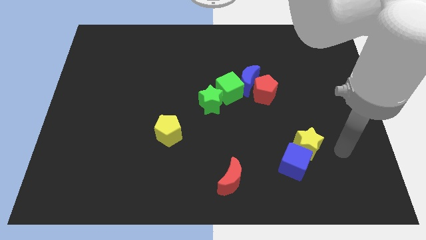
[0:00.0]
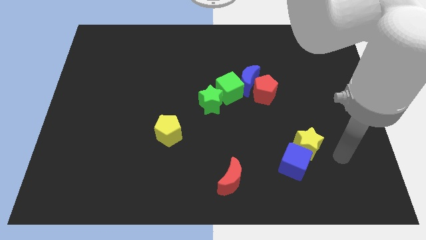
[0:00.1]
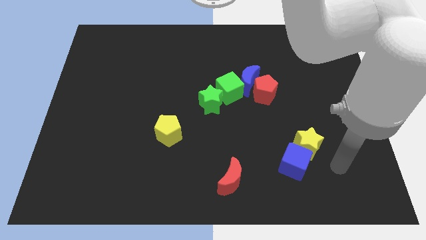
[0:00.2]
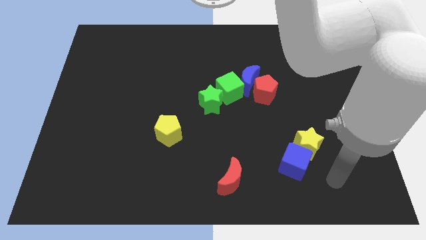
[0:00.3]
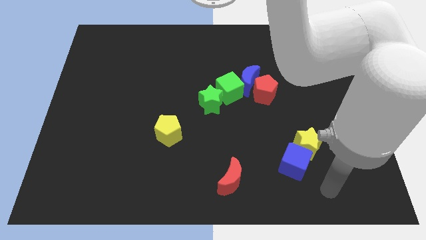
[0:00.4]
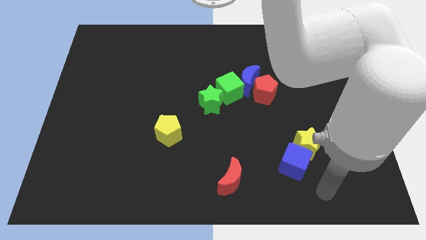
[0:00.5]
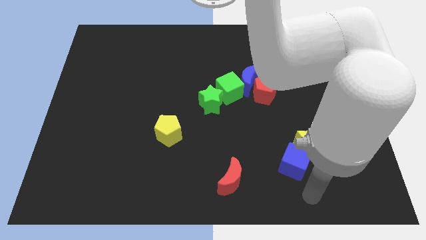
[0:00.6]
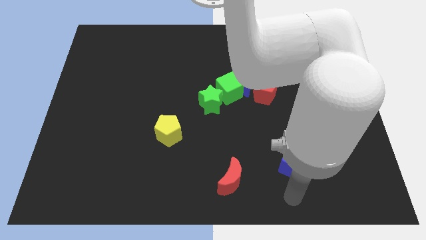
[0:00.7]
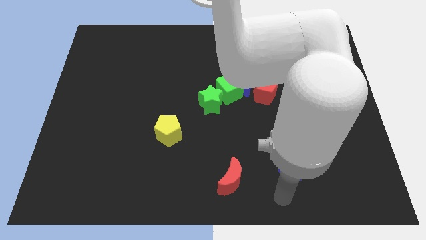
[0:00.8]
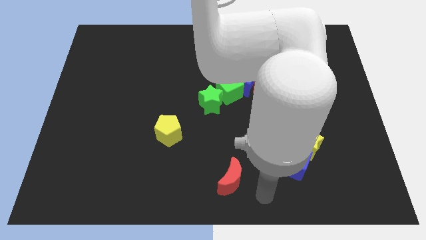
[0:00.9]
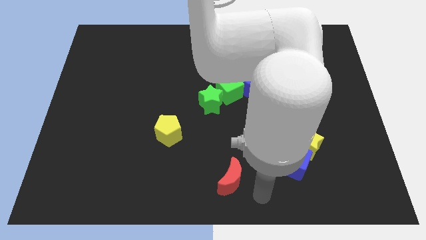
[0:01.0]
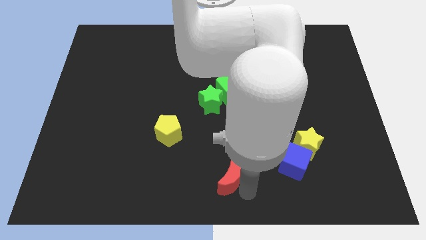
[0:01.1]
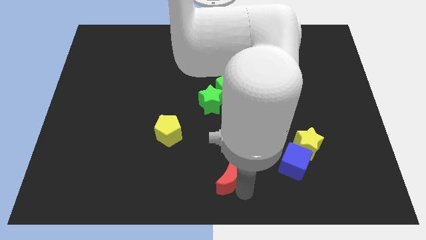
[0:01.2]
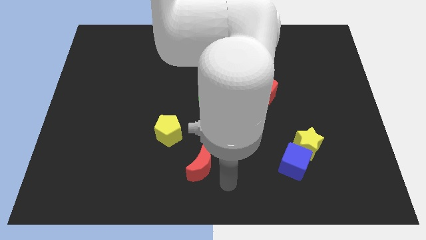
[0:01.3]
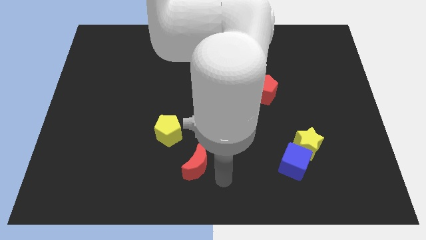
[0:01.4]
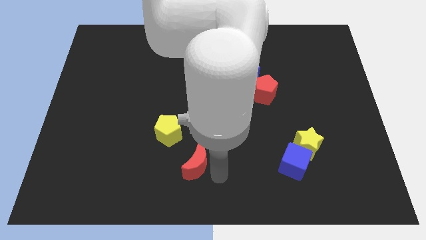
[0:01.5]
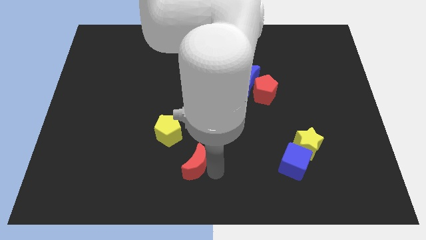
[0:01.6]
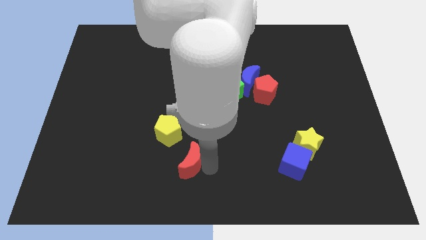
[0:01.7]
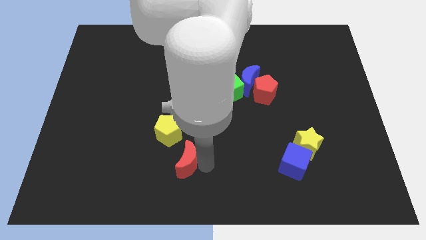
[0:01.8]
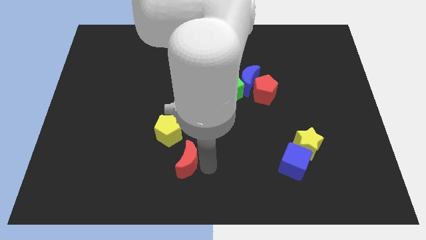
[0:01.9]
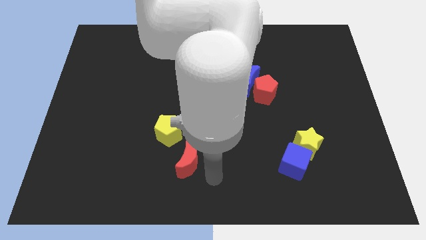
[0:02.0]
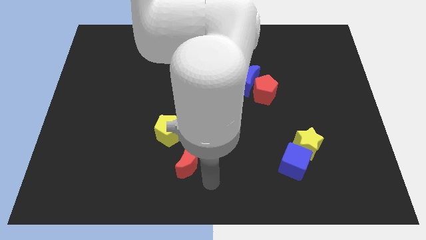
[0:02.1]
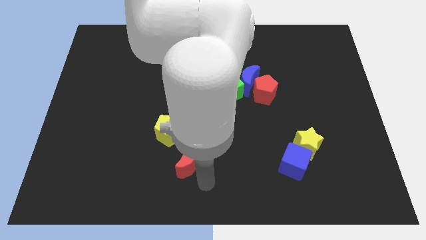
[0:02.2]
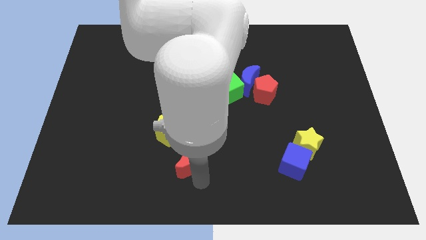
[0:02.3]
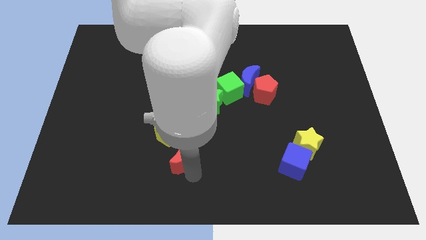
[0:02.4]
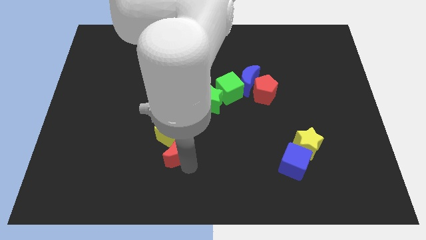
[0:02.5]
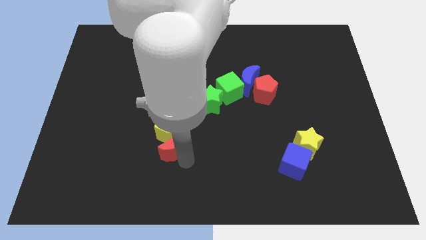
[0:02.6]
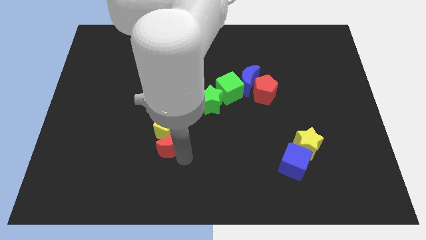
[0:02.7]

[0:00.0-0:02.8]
put the red moon to the yellow pentagon

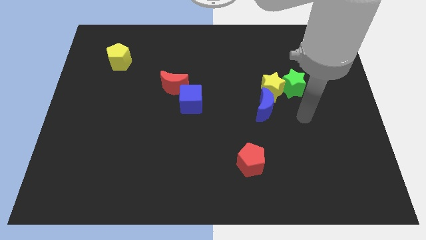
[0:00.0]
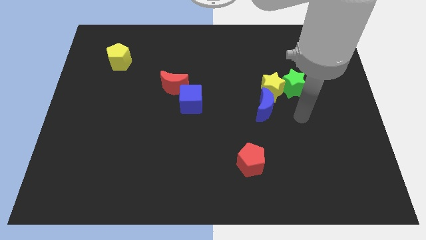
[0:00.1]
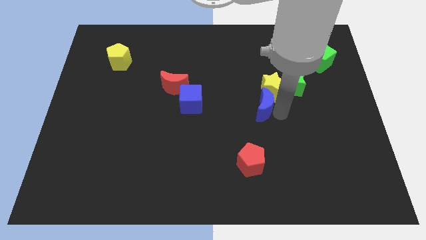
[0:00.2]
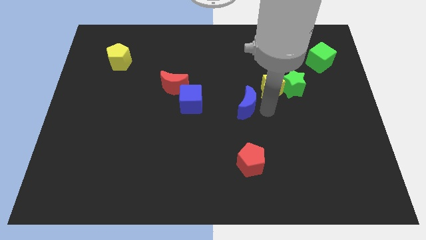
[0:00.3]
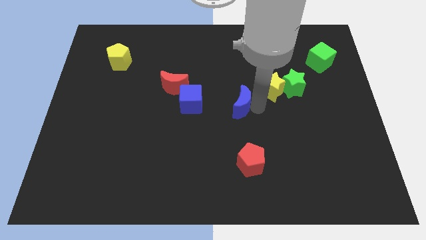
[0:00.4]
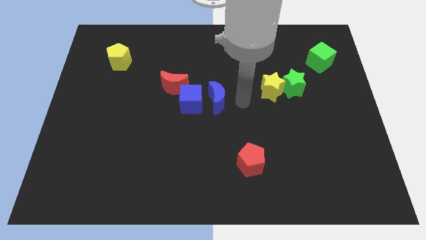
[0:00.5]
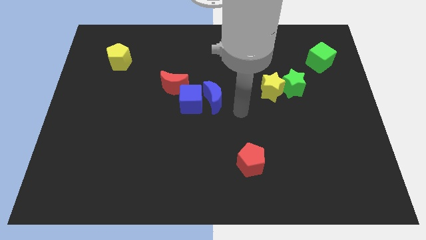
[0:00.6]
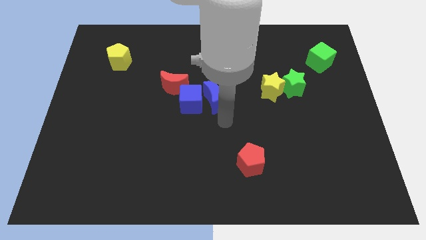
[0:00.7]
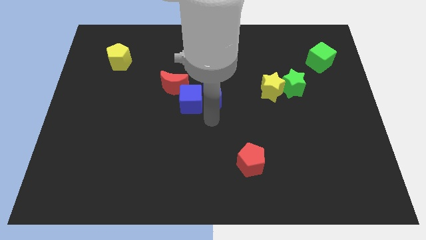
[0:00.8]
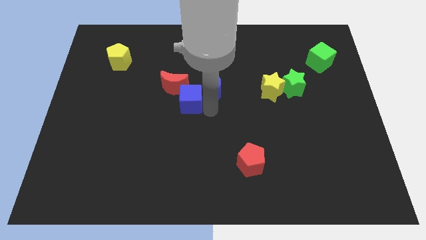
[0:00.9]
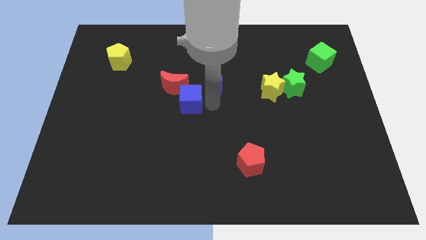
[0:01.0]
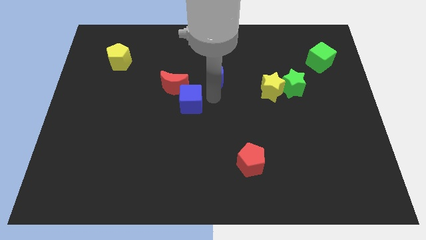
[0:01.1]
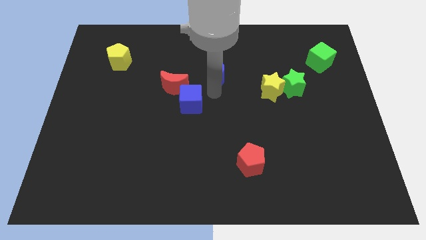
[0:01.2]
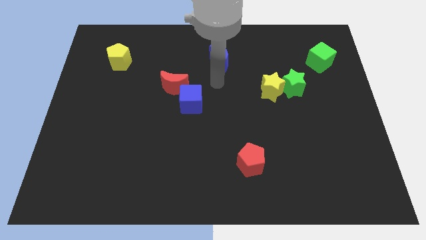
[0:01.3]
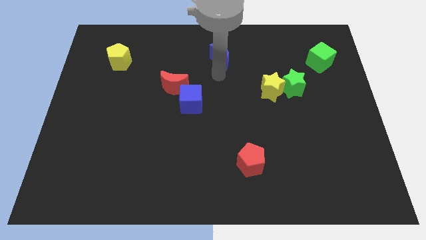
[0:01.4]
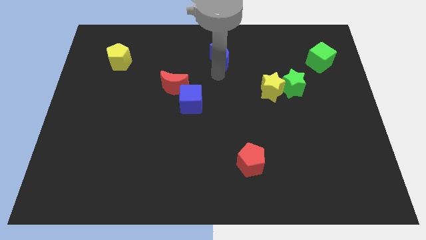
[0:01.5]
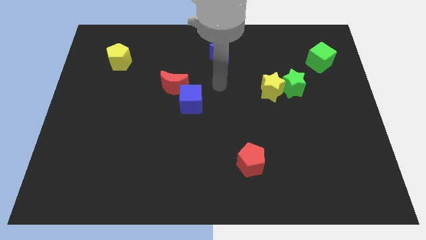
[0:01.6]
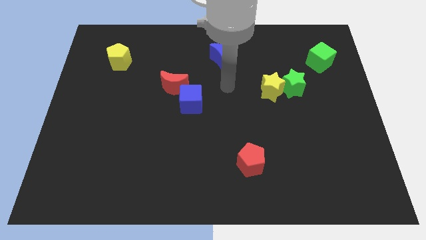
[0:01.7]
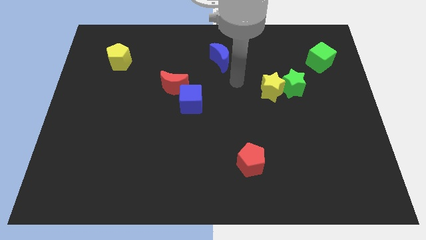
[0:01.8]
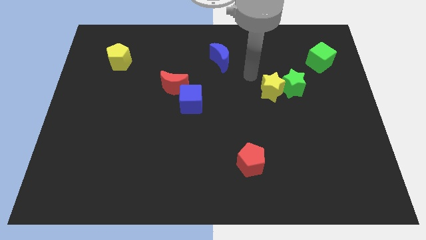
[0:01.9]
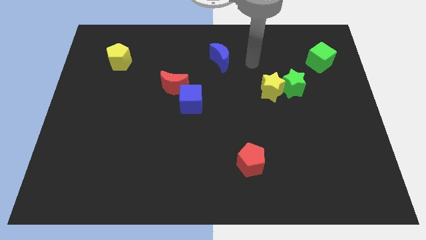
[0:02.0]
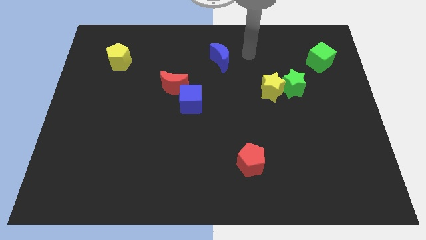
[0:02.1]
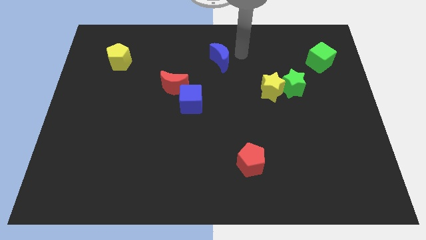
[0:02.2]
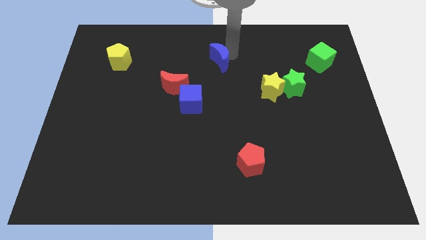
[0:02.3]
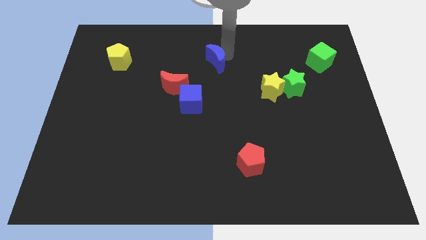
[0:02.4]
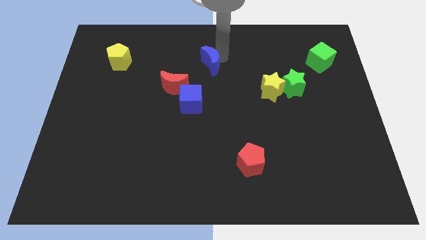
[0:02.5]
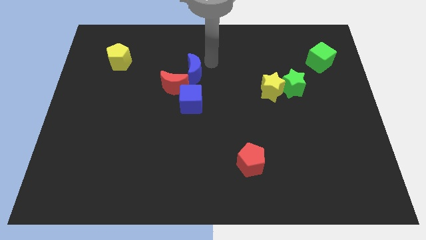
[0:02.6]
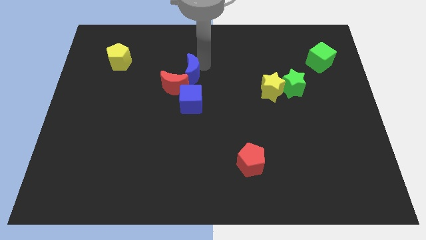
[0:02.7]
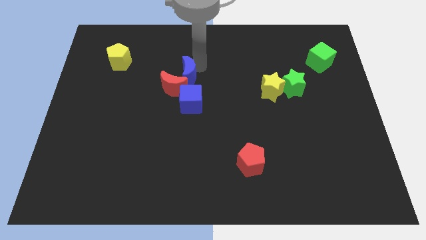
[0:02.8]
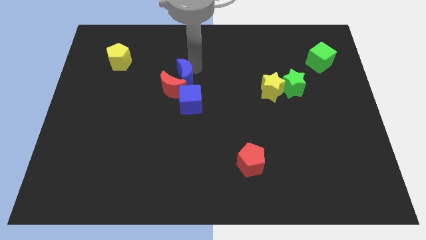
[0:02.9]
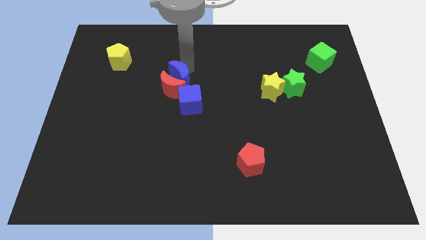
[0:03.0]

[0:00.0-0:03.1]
push the blue moon to the red moon

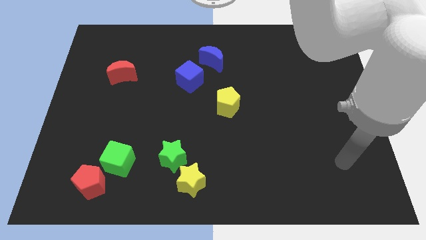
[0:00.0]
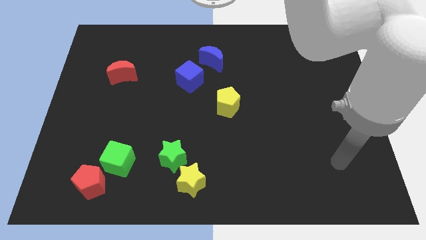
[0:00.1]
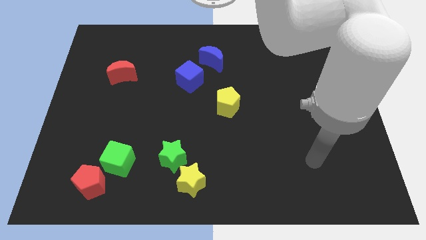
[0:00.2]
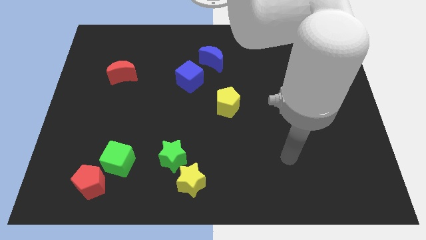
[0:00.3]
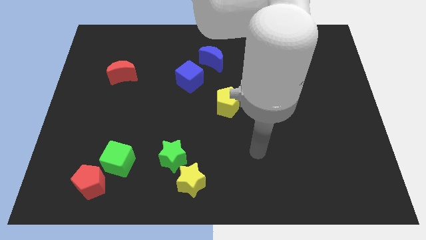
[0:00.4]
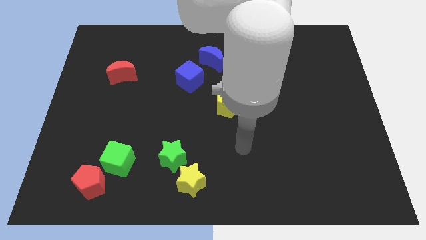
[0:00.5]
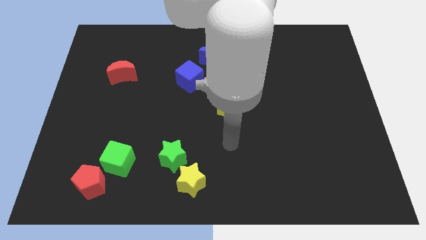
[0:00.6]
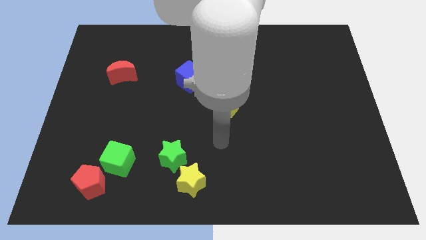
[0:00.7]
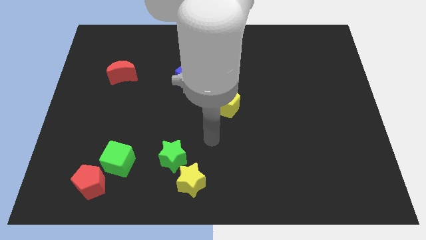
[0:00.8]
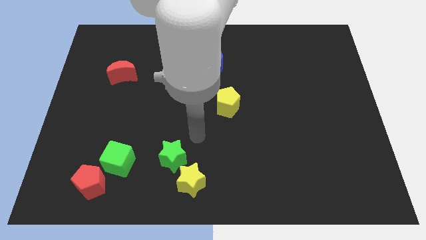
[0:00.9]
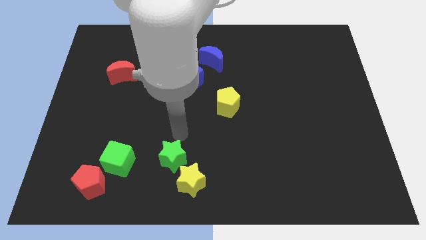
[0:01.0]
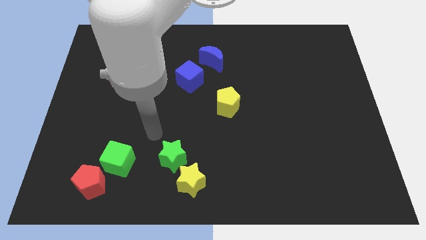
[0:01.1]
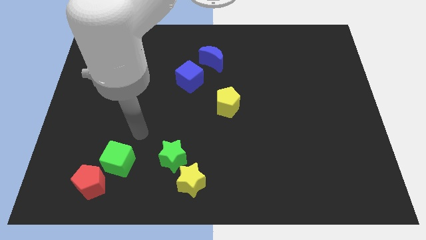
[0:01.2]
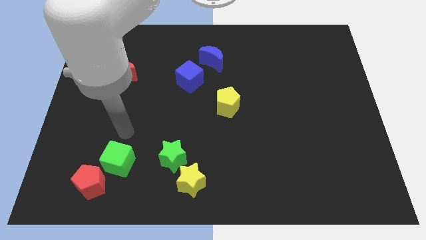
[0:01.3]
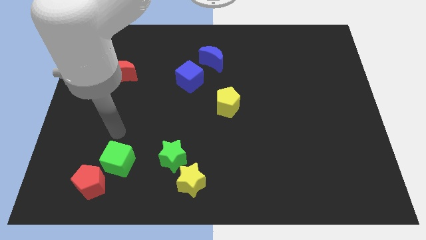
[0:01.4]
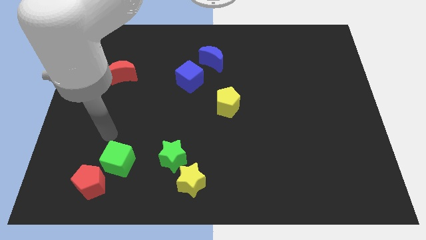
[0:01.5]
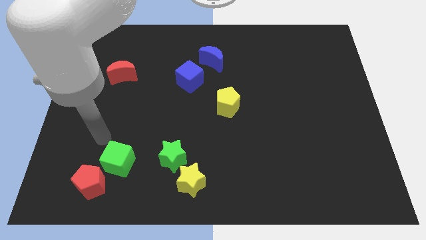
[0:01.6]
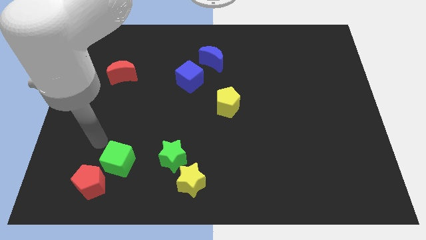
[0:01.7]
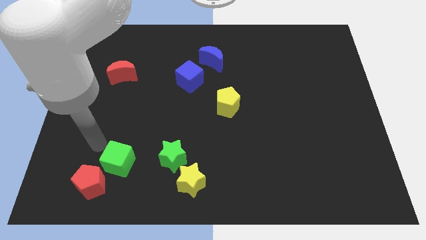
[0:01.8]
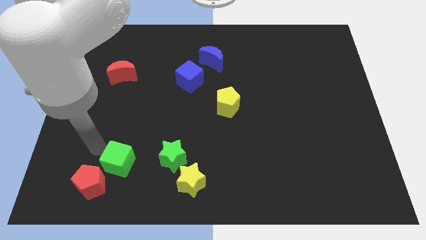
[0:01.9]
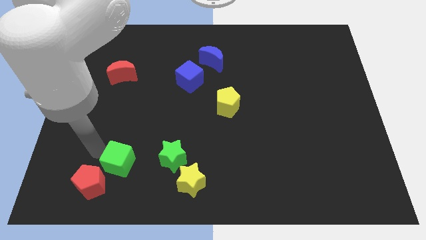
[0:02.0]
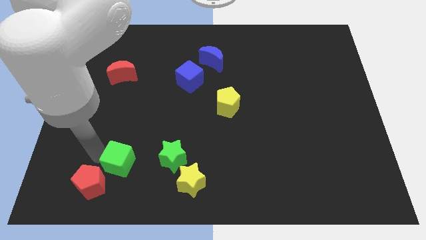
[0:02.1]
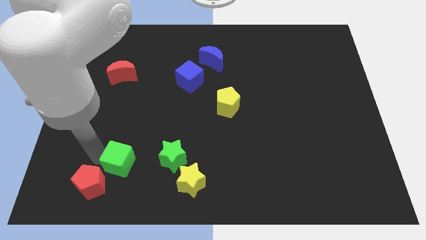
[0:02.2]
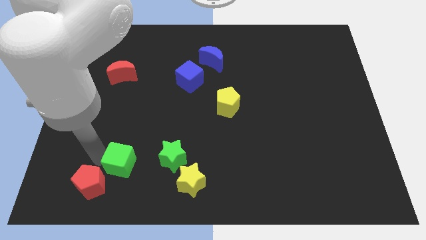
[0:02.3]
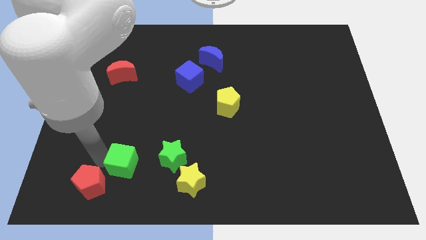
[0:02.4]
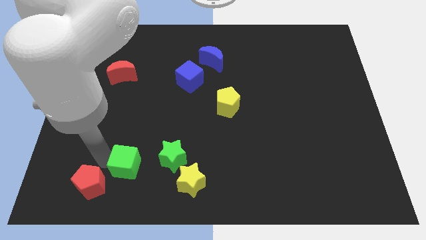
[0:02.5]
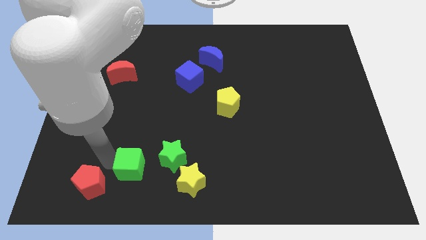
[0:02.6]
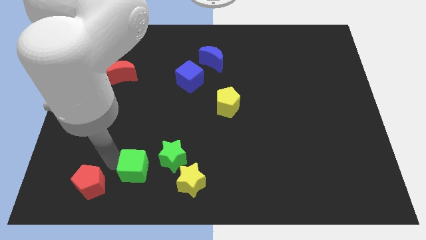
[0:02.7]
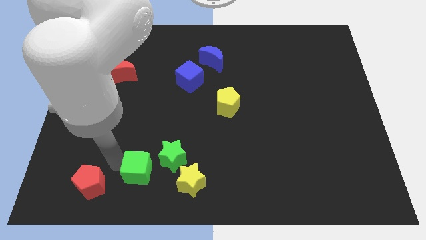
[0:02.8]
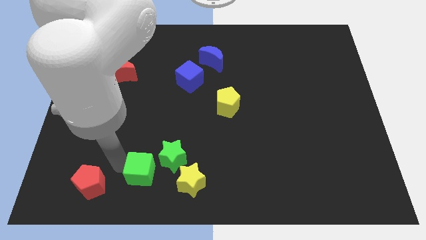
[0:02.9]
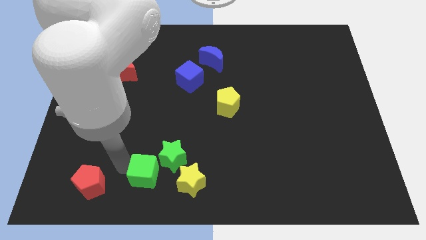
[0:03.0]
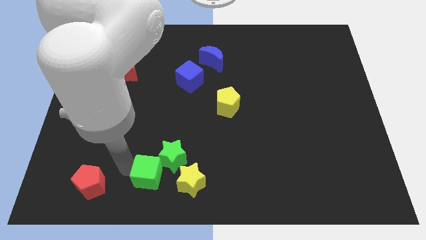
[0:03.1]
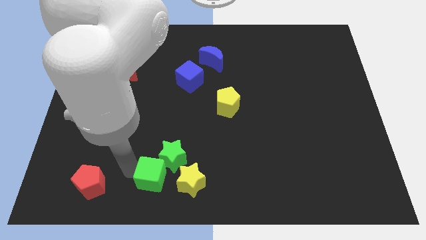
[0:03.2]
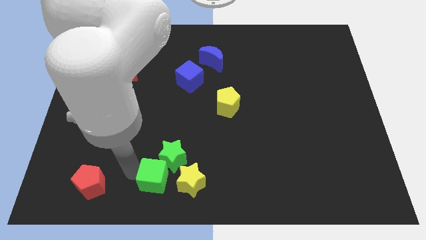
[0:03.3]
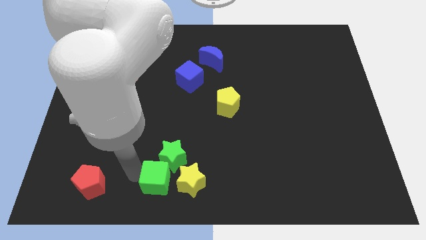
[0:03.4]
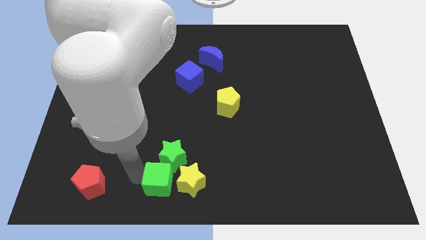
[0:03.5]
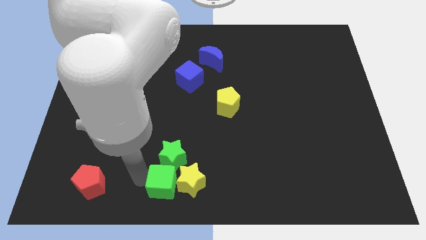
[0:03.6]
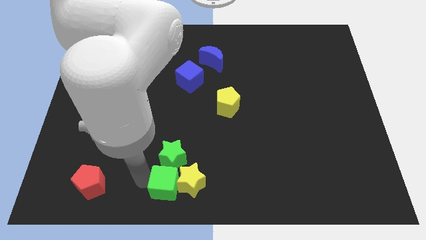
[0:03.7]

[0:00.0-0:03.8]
slide the green cube towards the yellow star
